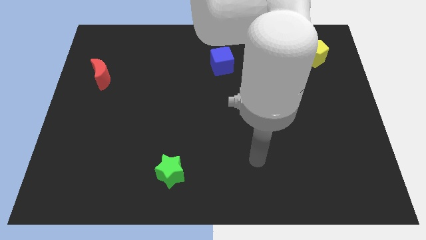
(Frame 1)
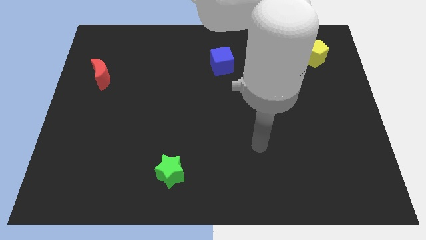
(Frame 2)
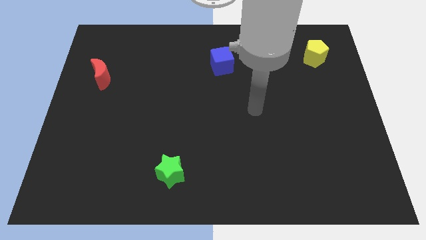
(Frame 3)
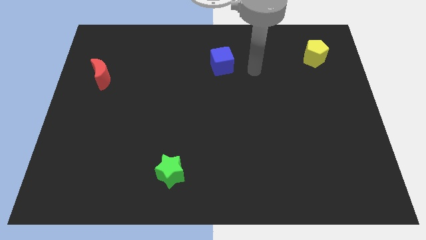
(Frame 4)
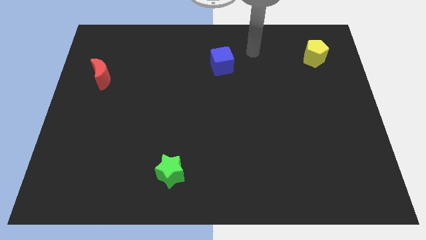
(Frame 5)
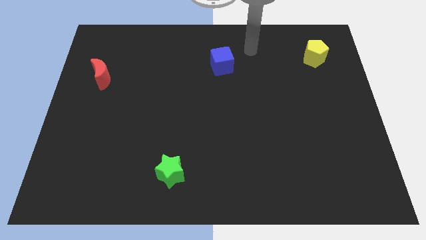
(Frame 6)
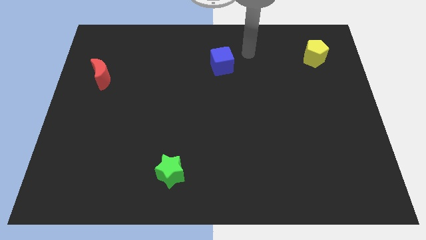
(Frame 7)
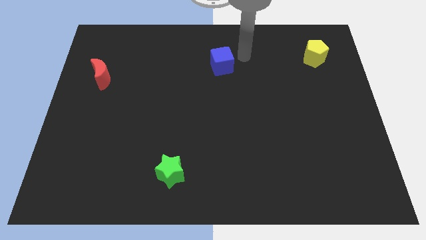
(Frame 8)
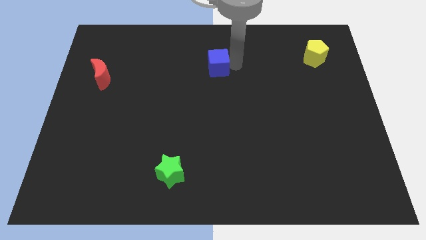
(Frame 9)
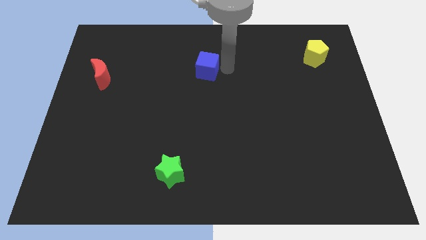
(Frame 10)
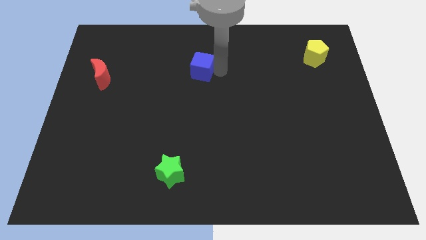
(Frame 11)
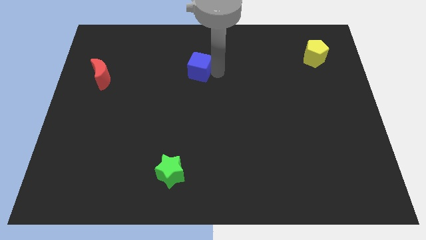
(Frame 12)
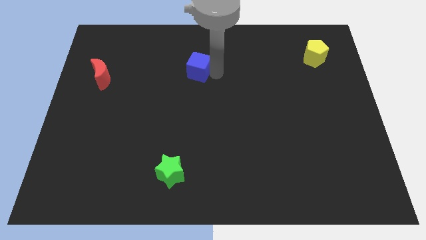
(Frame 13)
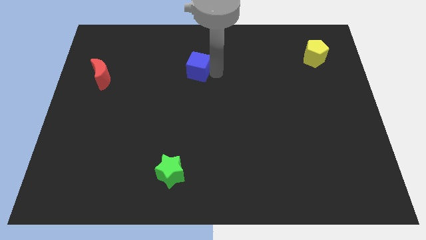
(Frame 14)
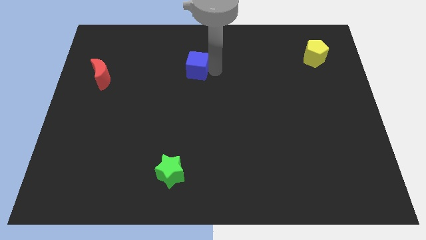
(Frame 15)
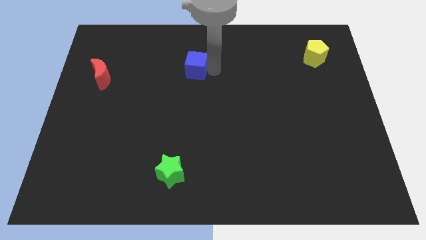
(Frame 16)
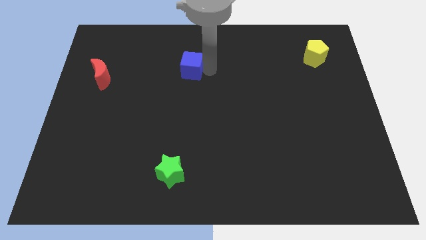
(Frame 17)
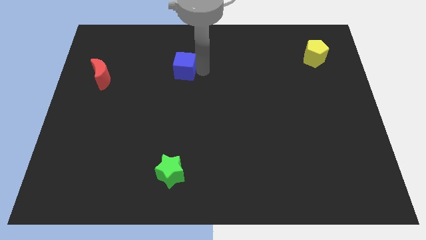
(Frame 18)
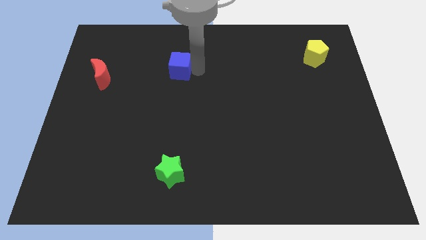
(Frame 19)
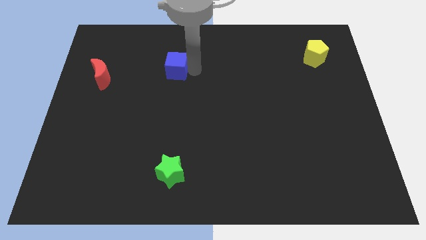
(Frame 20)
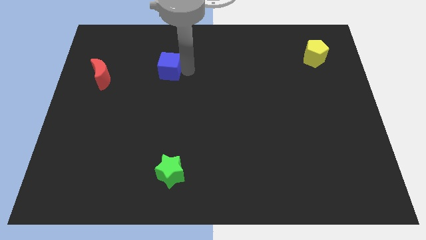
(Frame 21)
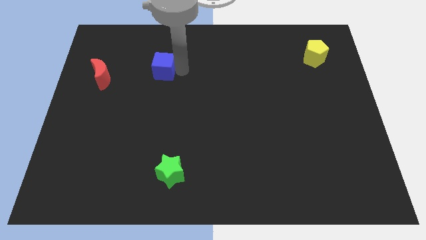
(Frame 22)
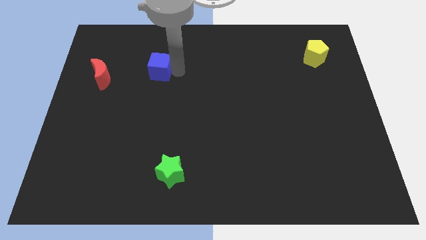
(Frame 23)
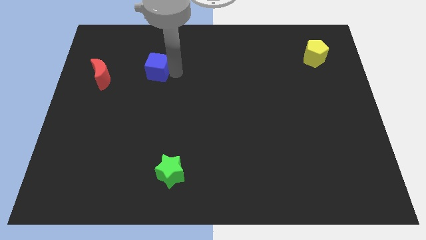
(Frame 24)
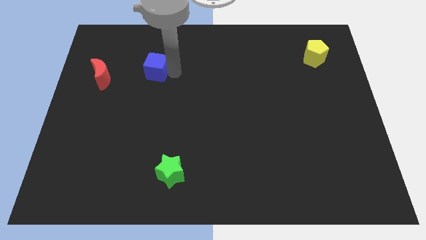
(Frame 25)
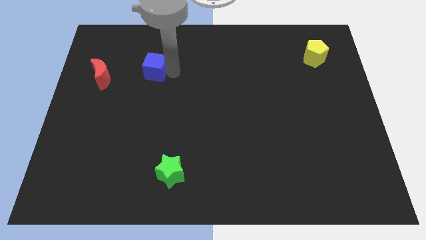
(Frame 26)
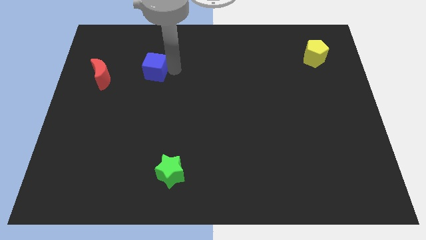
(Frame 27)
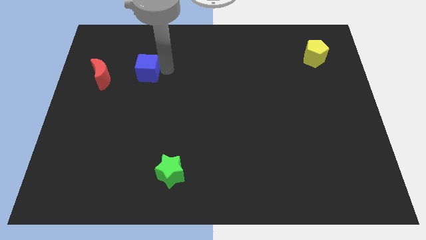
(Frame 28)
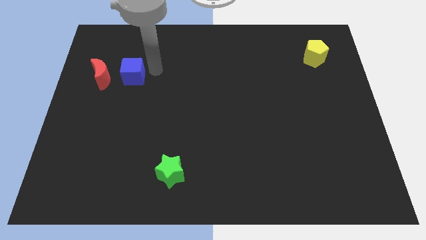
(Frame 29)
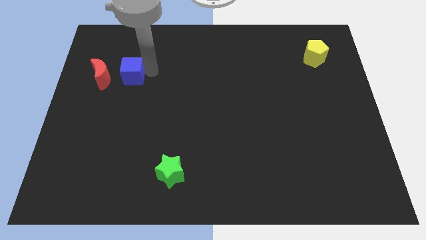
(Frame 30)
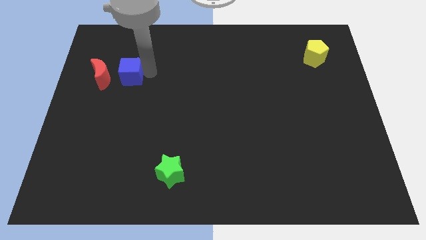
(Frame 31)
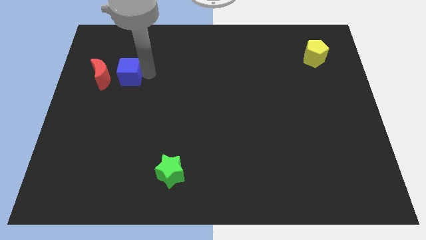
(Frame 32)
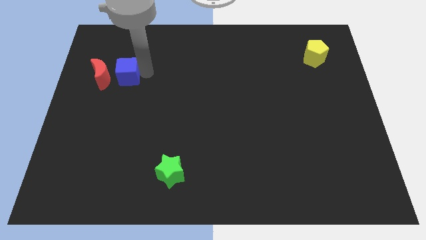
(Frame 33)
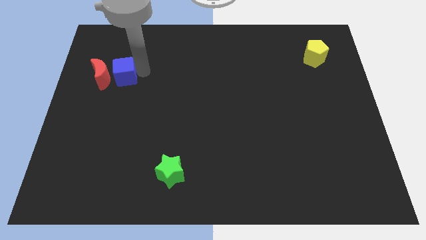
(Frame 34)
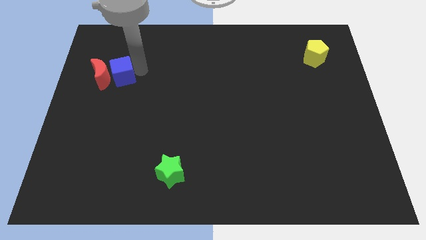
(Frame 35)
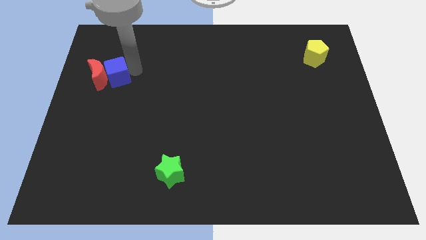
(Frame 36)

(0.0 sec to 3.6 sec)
move the blue cube next to the red moon

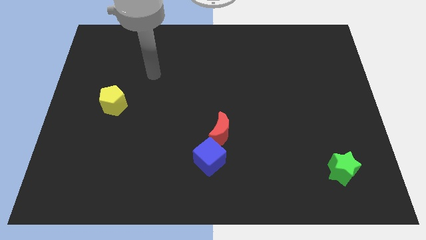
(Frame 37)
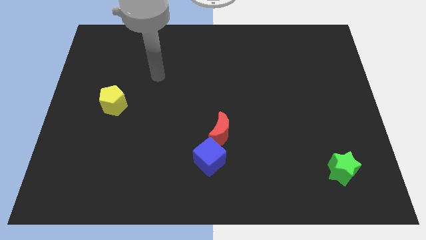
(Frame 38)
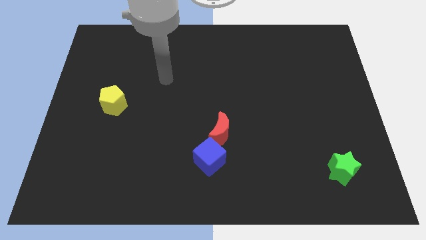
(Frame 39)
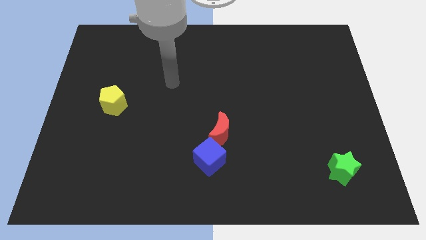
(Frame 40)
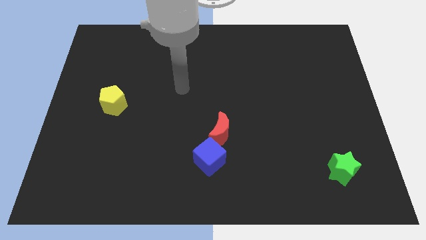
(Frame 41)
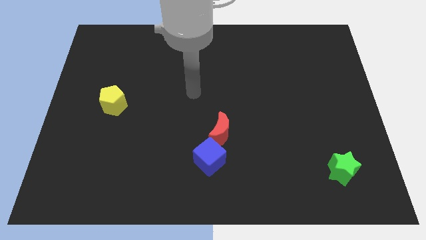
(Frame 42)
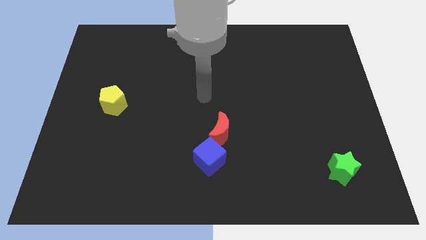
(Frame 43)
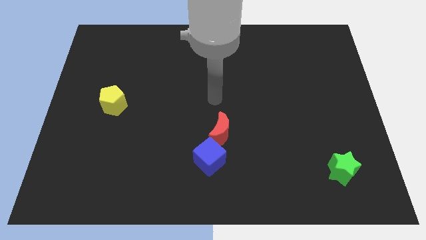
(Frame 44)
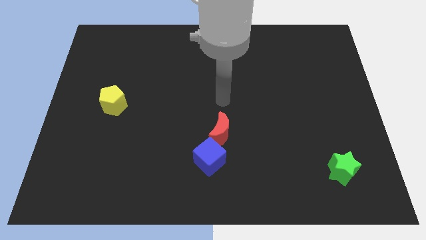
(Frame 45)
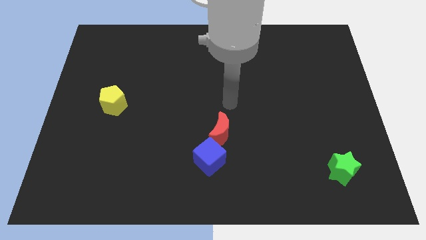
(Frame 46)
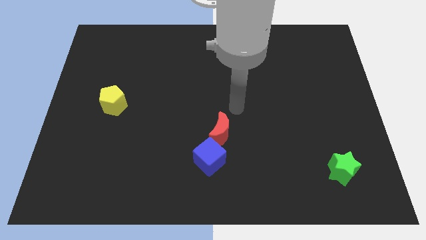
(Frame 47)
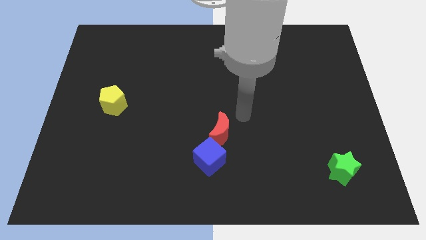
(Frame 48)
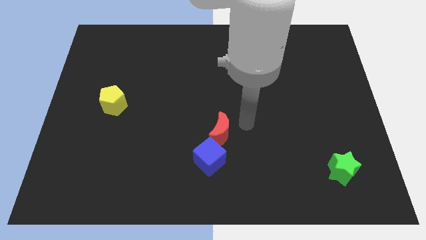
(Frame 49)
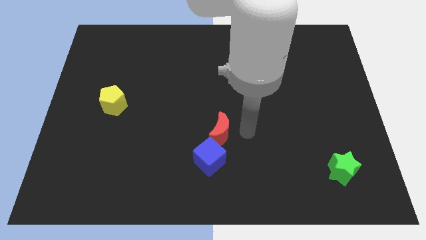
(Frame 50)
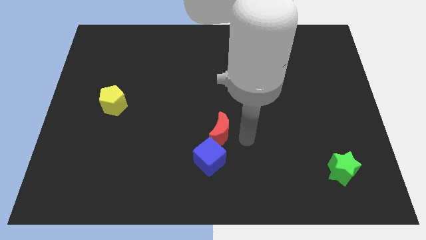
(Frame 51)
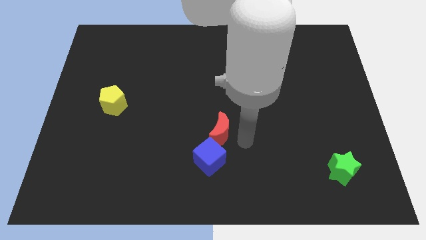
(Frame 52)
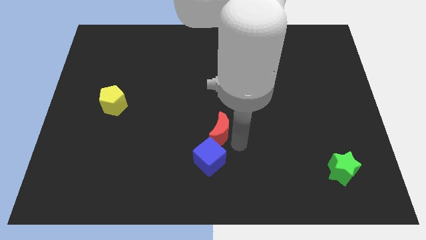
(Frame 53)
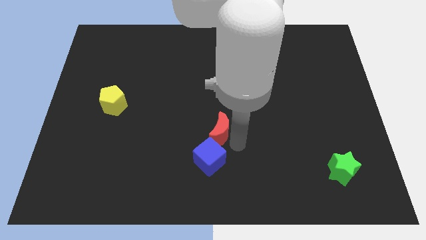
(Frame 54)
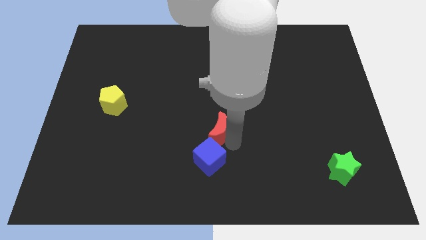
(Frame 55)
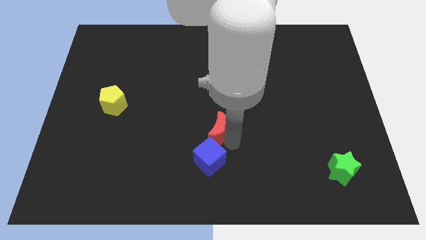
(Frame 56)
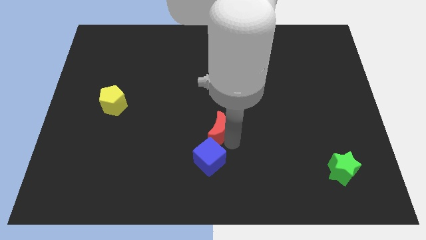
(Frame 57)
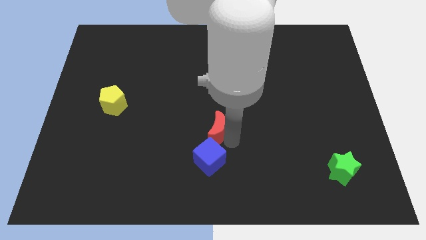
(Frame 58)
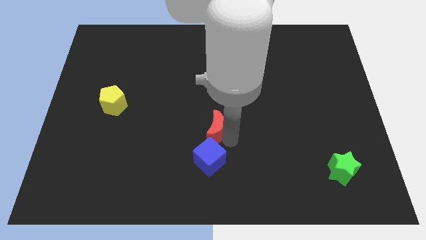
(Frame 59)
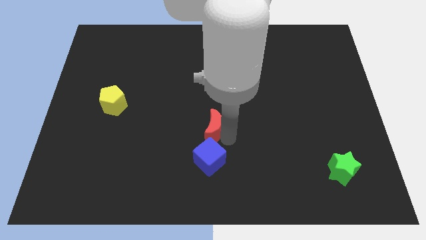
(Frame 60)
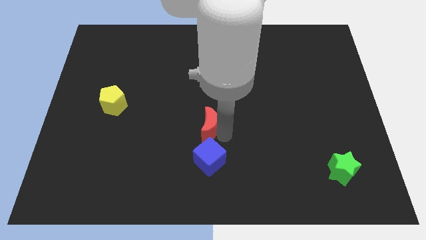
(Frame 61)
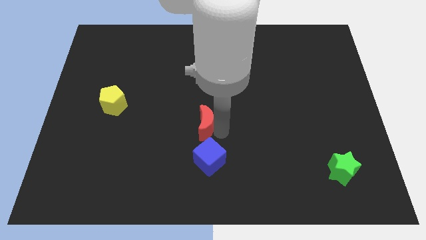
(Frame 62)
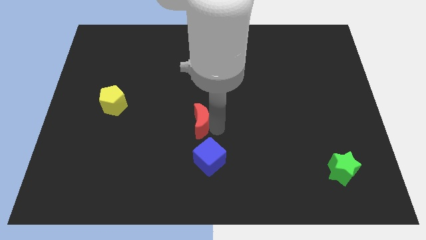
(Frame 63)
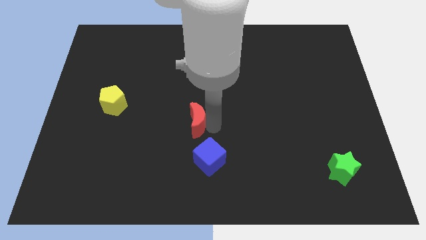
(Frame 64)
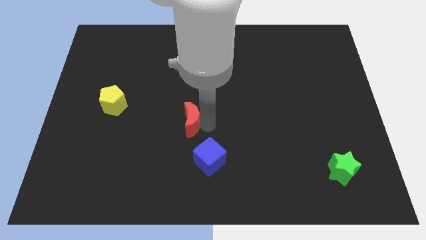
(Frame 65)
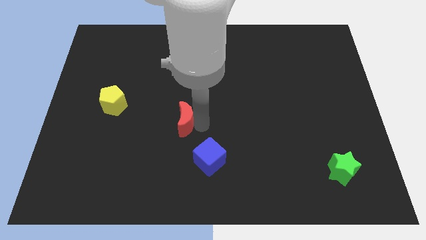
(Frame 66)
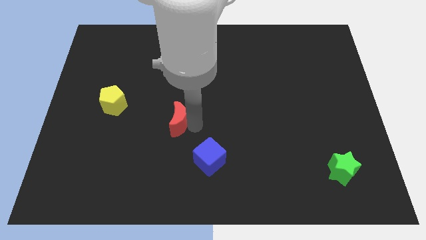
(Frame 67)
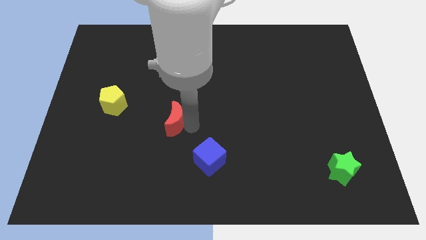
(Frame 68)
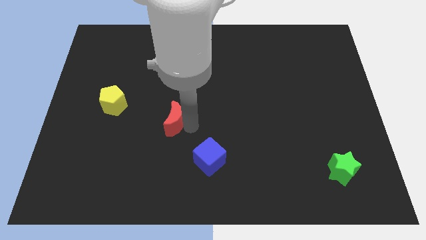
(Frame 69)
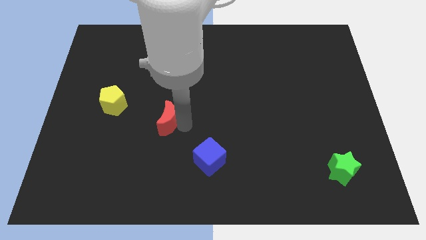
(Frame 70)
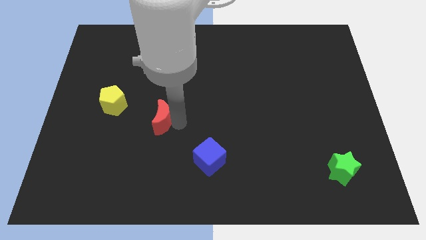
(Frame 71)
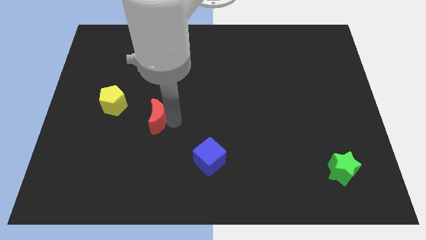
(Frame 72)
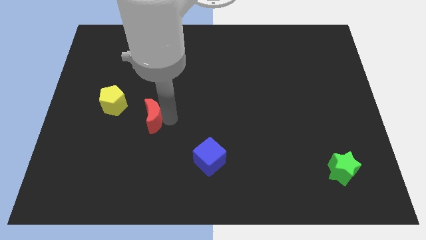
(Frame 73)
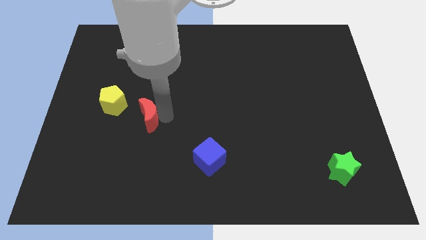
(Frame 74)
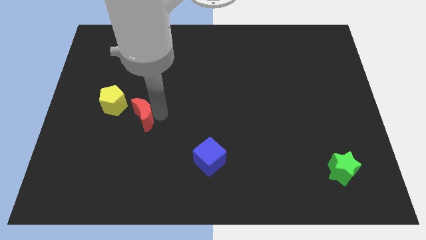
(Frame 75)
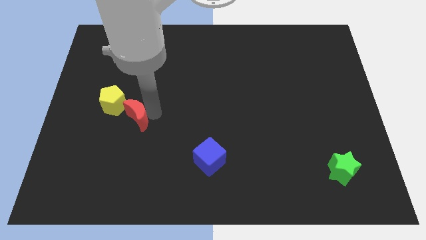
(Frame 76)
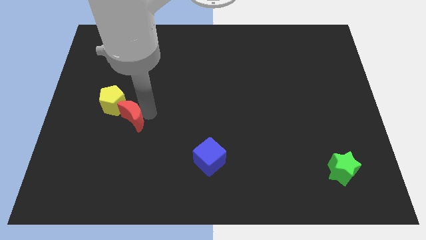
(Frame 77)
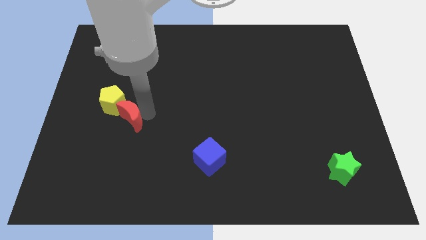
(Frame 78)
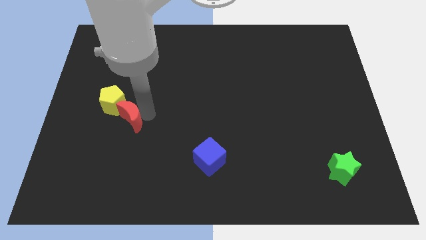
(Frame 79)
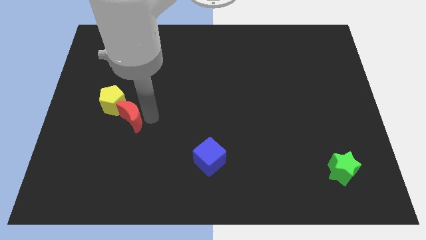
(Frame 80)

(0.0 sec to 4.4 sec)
move the red block to the pentagon

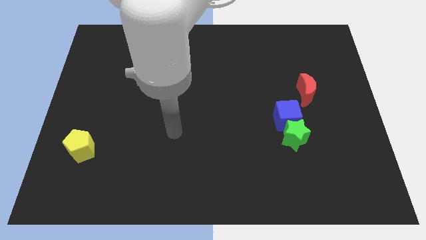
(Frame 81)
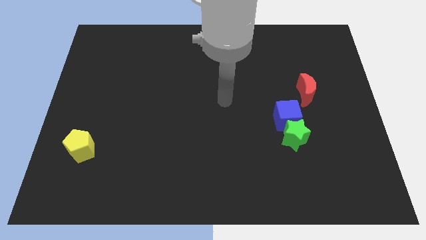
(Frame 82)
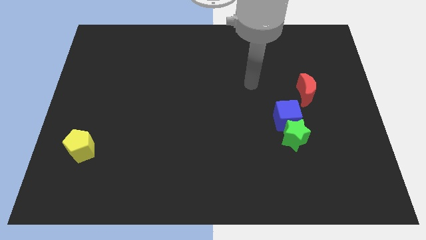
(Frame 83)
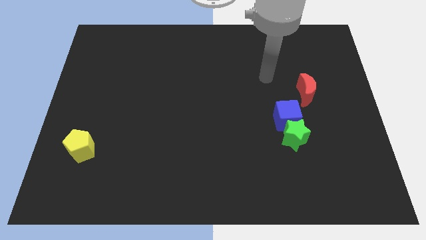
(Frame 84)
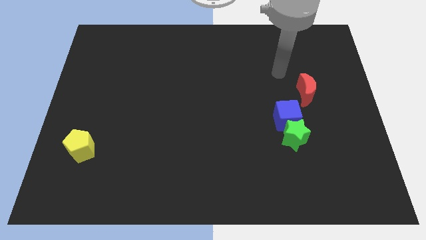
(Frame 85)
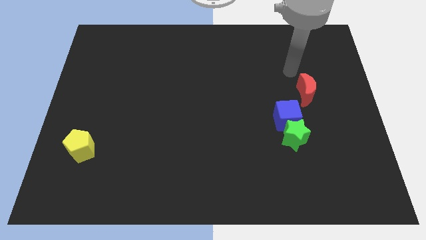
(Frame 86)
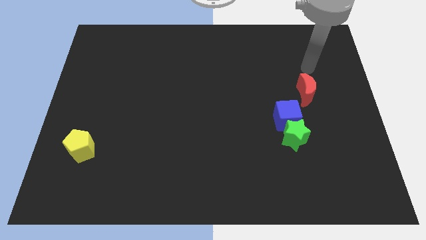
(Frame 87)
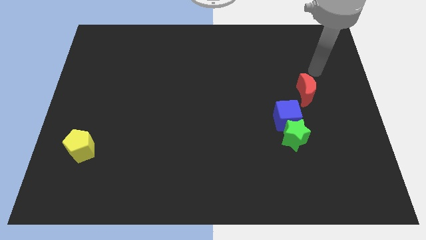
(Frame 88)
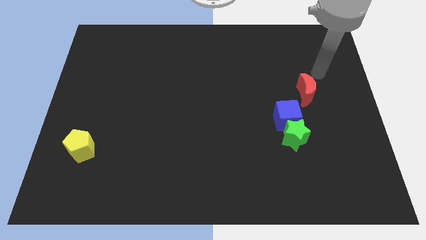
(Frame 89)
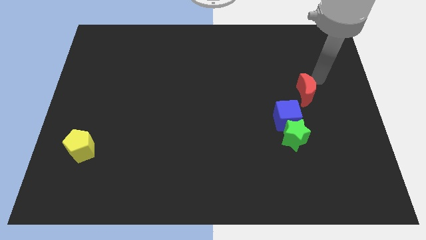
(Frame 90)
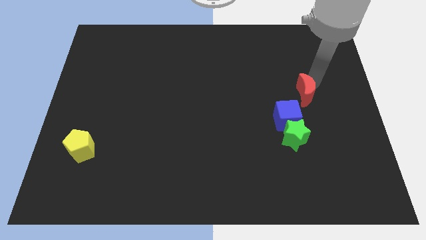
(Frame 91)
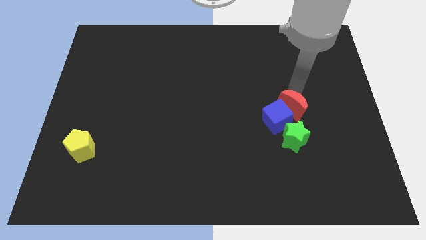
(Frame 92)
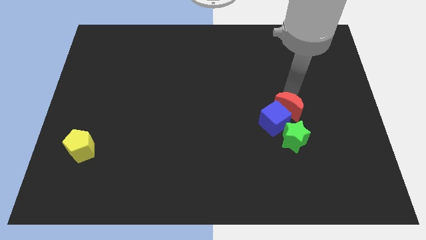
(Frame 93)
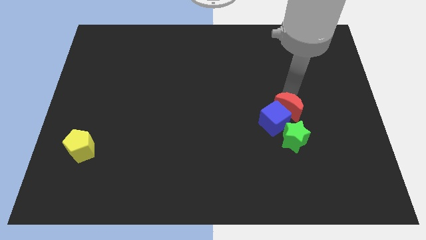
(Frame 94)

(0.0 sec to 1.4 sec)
push the red block next to the blue cube
